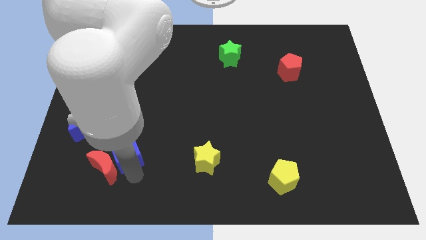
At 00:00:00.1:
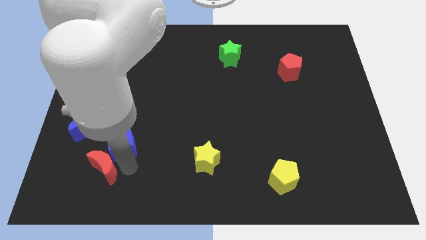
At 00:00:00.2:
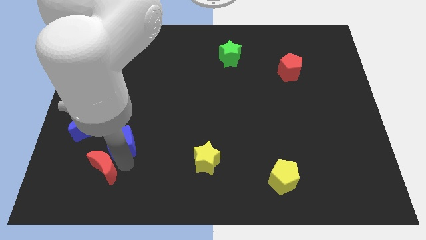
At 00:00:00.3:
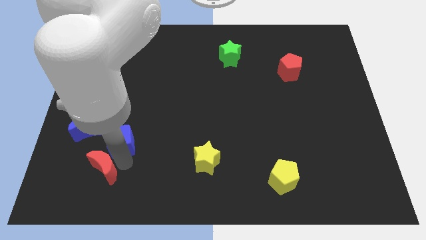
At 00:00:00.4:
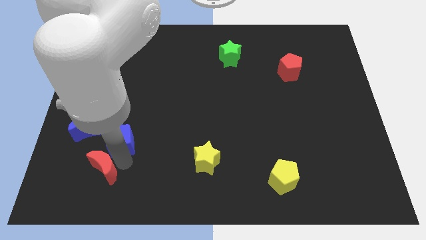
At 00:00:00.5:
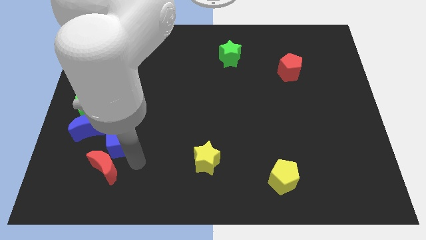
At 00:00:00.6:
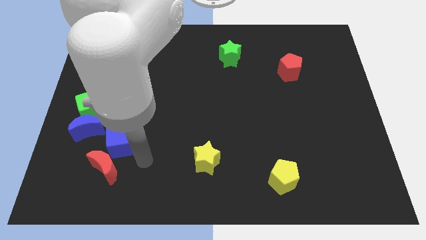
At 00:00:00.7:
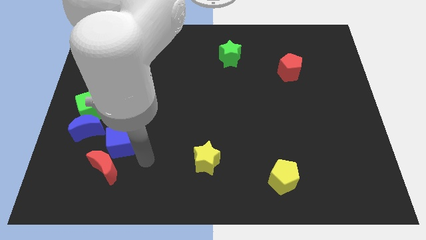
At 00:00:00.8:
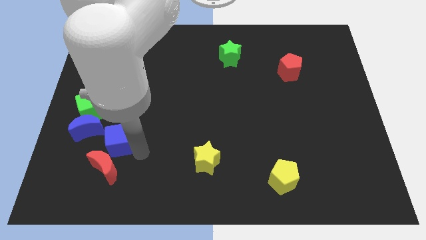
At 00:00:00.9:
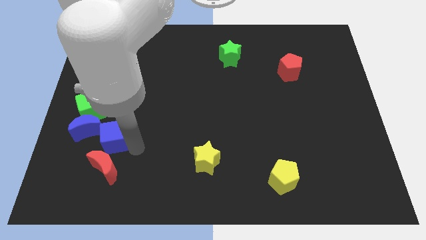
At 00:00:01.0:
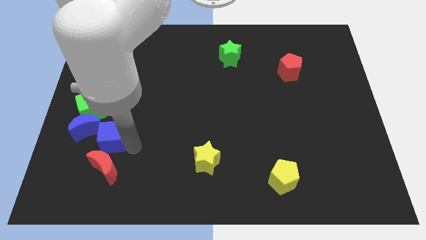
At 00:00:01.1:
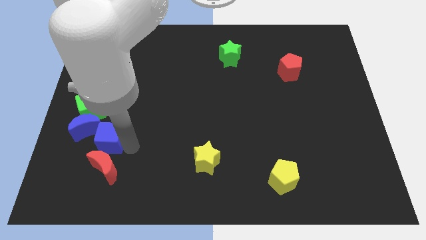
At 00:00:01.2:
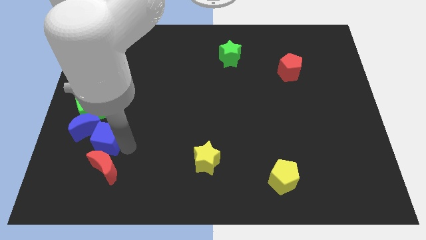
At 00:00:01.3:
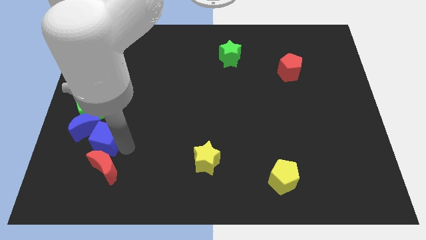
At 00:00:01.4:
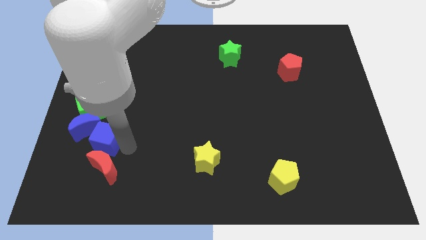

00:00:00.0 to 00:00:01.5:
place the blue cube below the blue crescent

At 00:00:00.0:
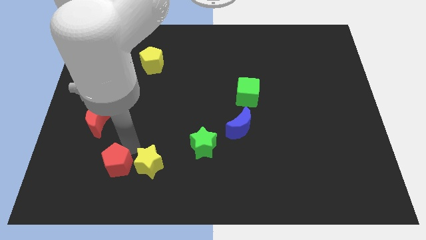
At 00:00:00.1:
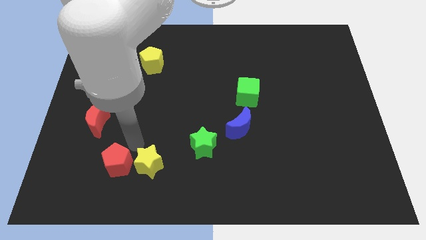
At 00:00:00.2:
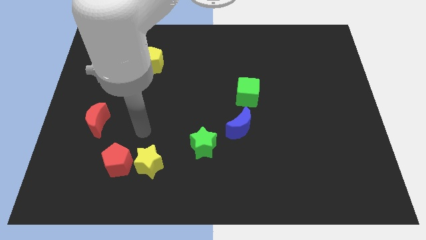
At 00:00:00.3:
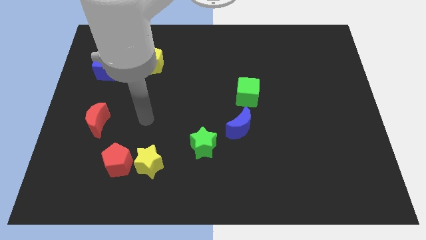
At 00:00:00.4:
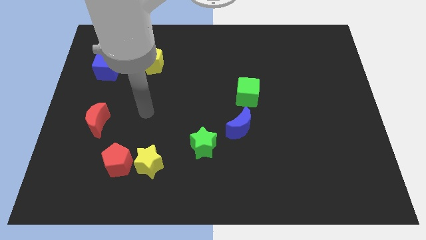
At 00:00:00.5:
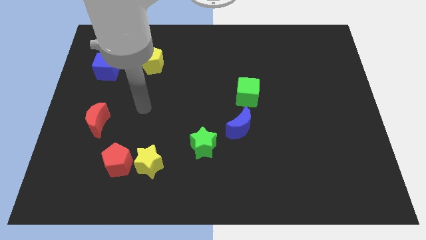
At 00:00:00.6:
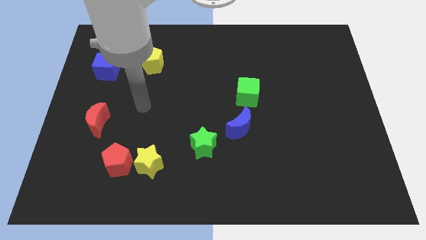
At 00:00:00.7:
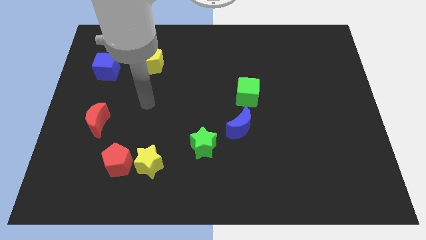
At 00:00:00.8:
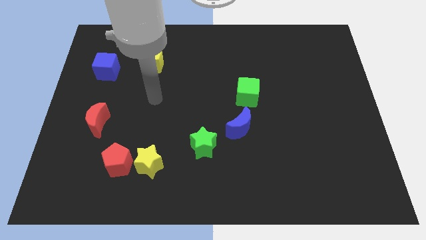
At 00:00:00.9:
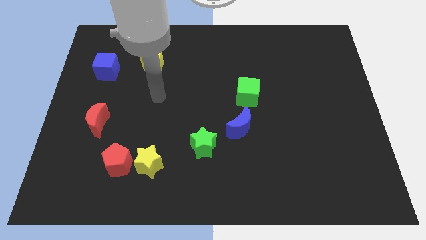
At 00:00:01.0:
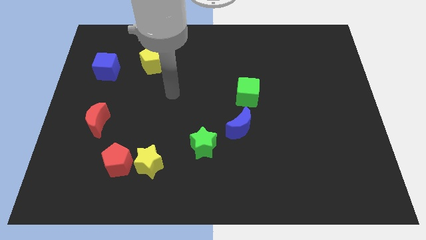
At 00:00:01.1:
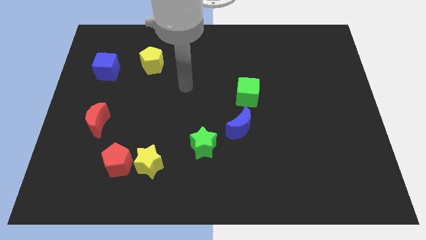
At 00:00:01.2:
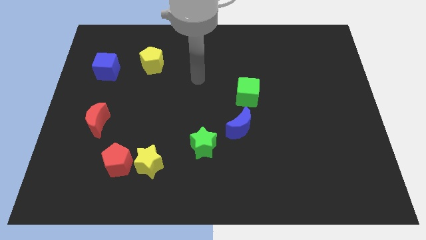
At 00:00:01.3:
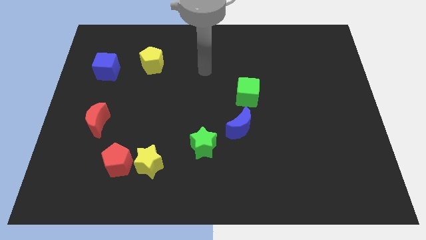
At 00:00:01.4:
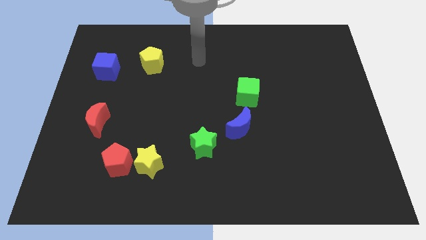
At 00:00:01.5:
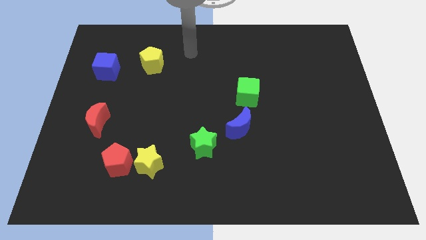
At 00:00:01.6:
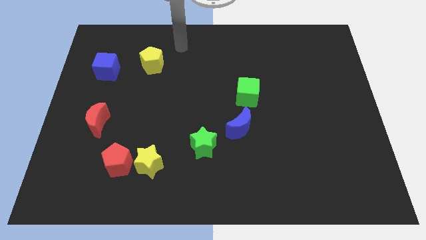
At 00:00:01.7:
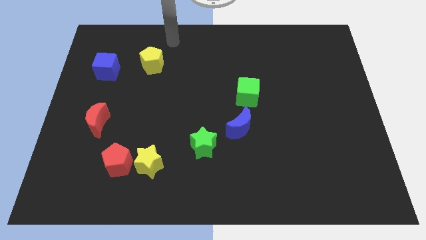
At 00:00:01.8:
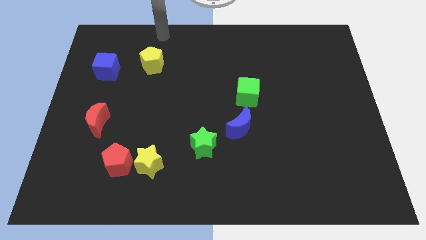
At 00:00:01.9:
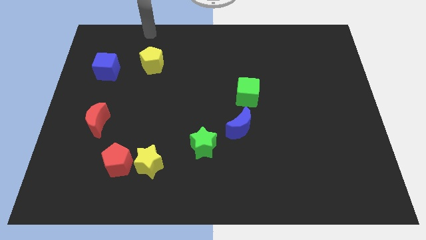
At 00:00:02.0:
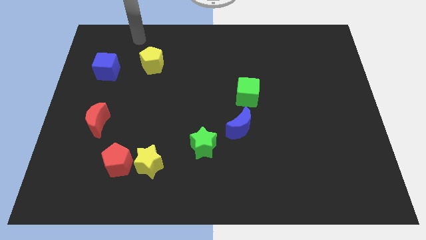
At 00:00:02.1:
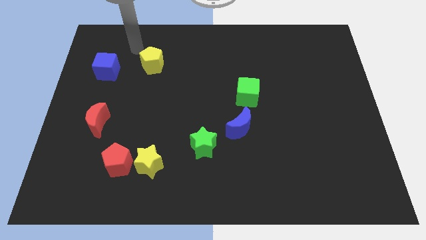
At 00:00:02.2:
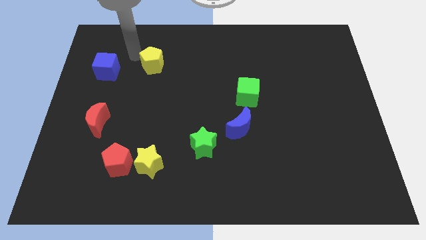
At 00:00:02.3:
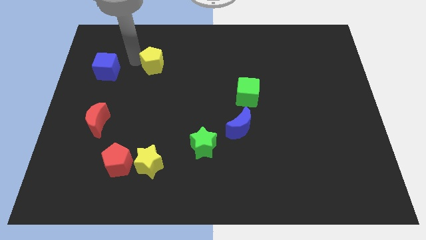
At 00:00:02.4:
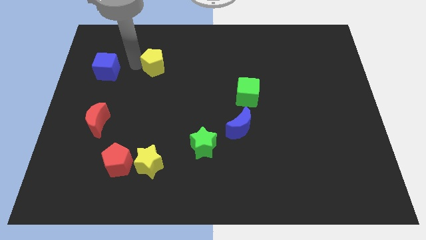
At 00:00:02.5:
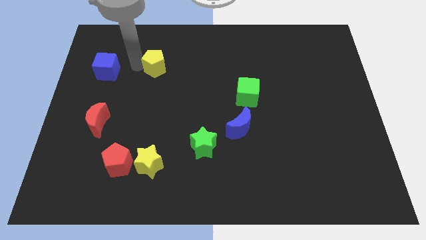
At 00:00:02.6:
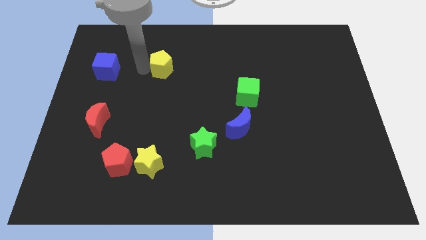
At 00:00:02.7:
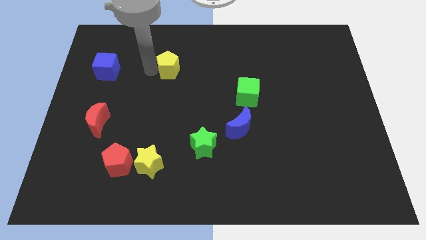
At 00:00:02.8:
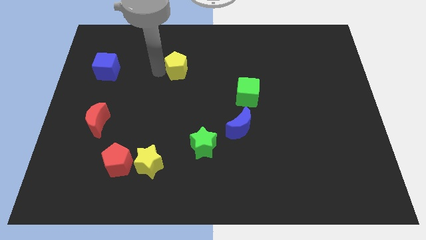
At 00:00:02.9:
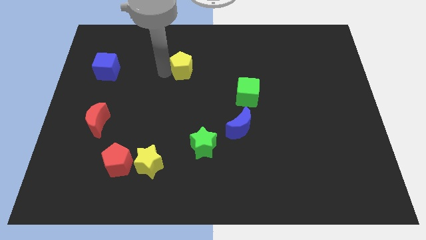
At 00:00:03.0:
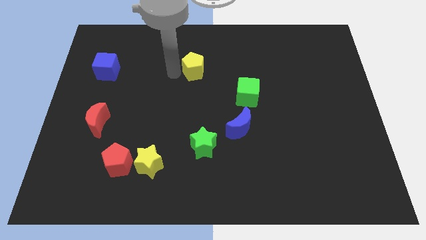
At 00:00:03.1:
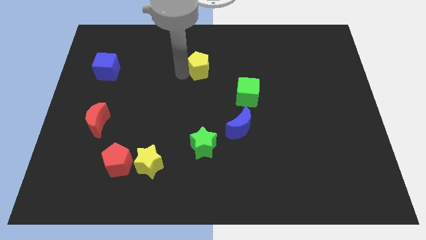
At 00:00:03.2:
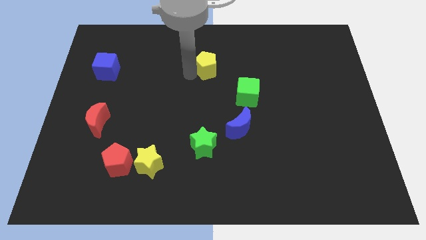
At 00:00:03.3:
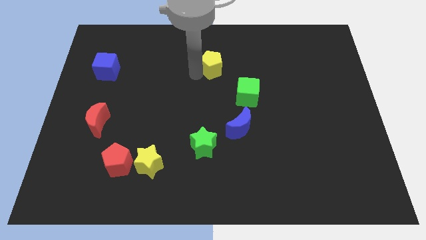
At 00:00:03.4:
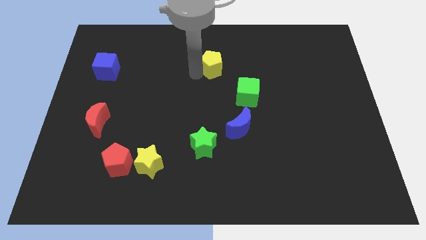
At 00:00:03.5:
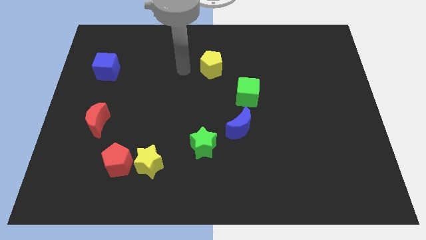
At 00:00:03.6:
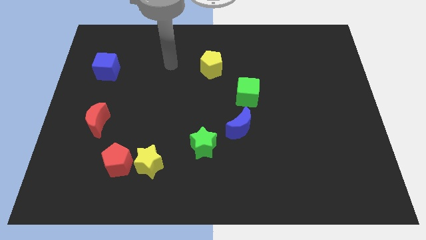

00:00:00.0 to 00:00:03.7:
place the yellow pentagon diagonal to the green cube

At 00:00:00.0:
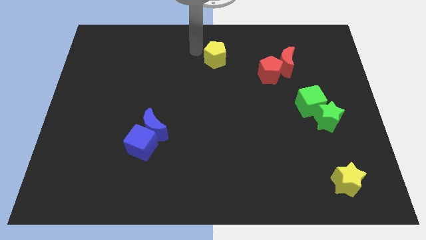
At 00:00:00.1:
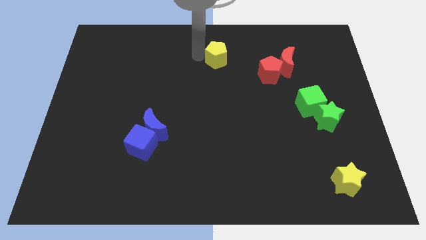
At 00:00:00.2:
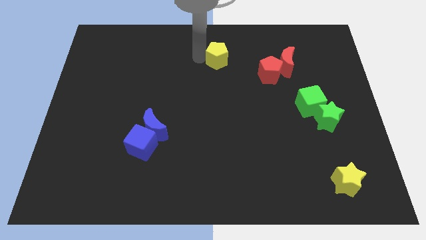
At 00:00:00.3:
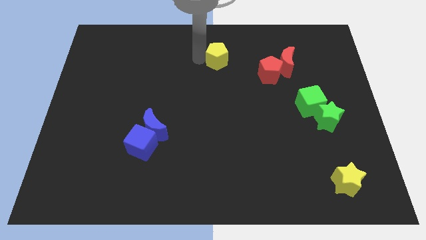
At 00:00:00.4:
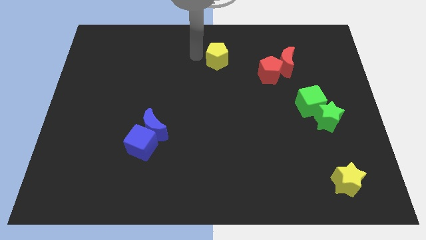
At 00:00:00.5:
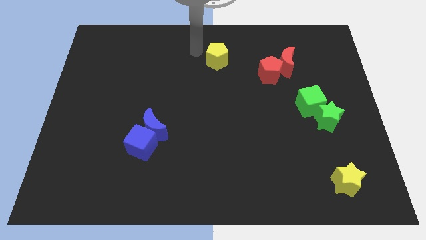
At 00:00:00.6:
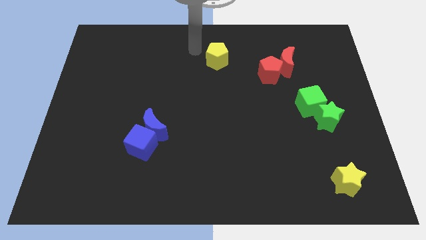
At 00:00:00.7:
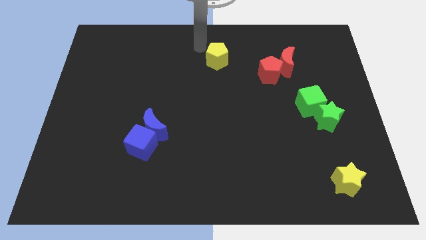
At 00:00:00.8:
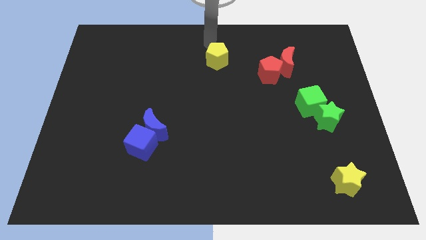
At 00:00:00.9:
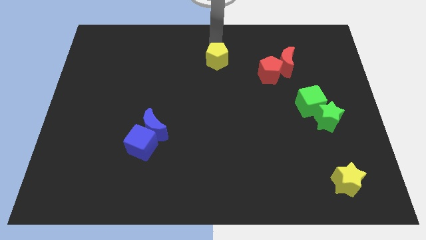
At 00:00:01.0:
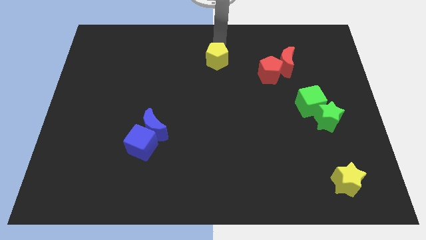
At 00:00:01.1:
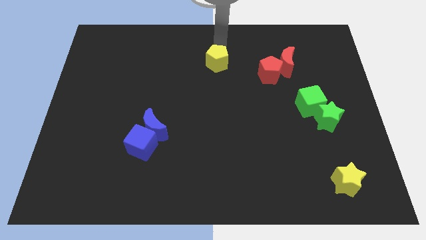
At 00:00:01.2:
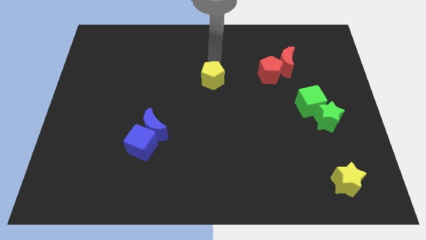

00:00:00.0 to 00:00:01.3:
push the yellow pentagon to the left of the red pentagon

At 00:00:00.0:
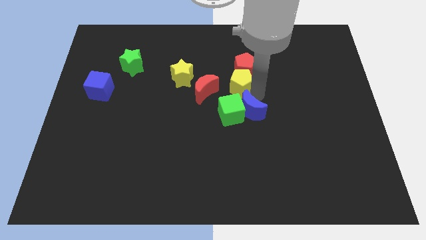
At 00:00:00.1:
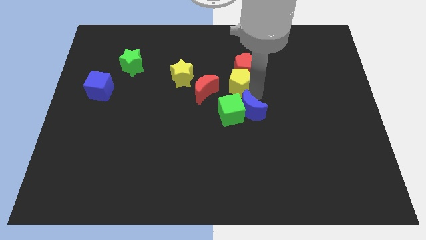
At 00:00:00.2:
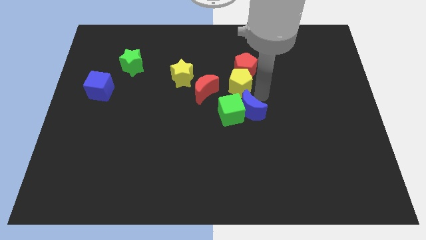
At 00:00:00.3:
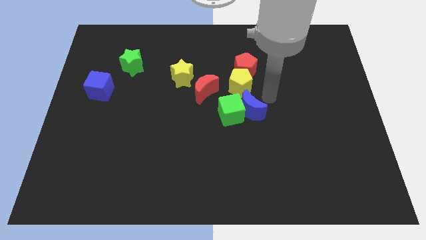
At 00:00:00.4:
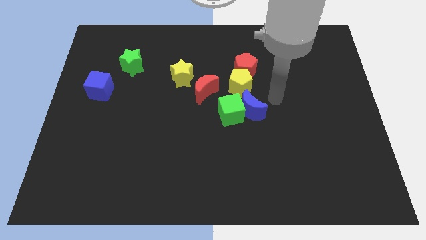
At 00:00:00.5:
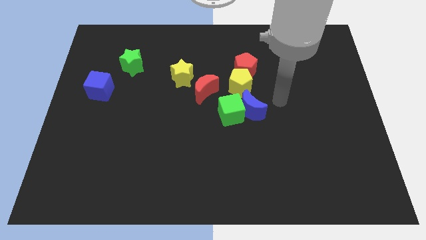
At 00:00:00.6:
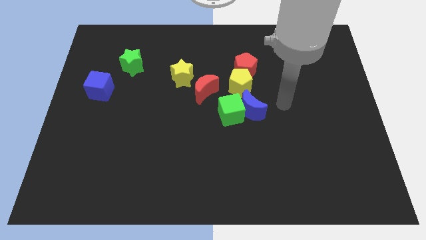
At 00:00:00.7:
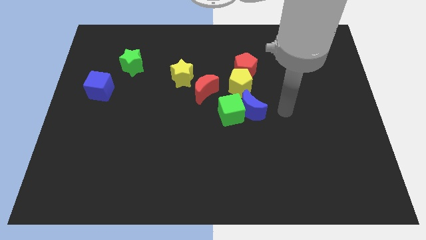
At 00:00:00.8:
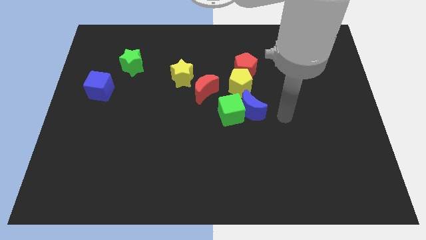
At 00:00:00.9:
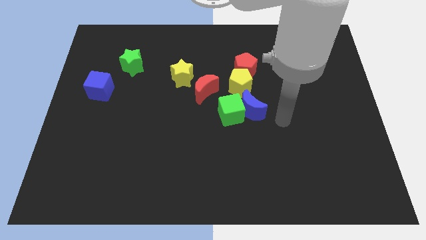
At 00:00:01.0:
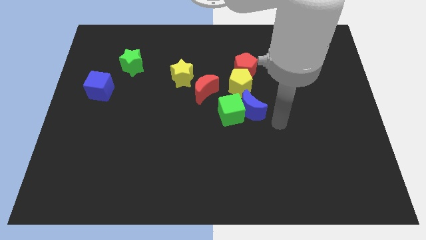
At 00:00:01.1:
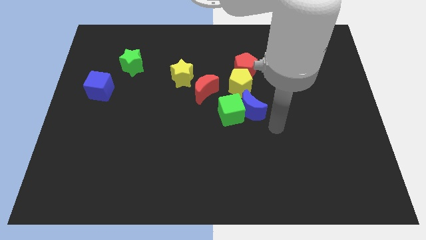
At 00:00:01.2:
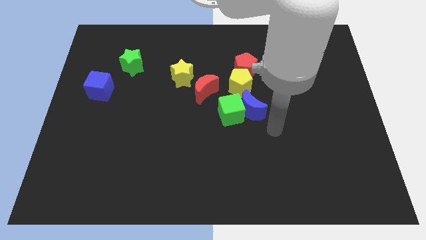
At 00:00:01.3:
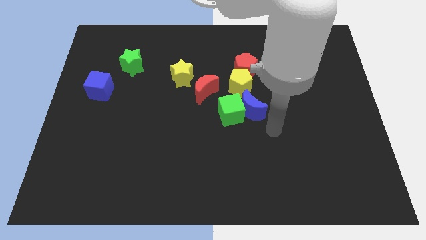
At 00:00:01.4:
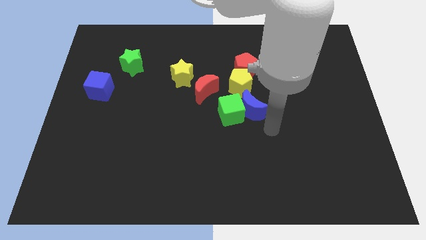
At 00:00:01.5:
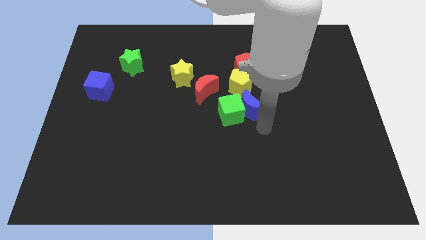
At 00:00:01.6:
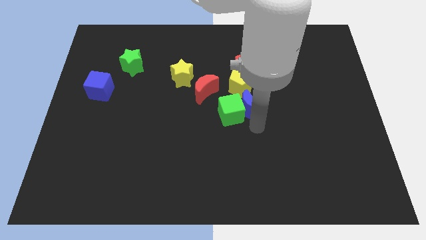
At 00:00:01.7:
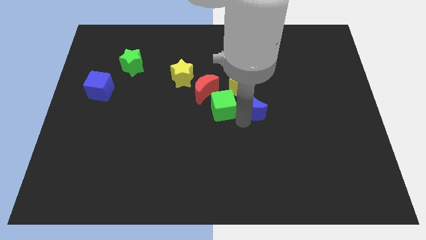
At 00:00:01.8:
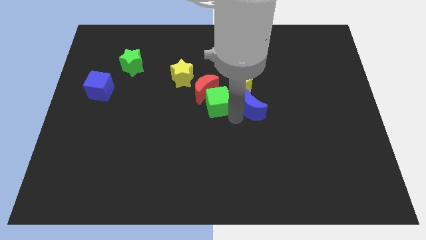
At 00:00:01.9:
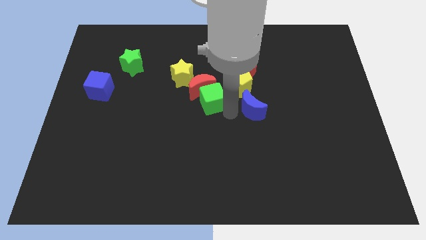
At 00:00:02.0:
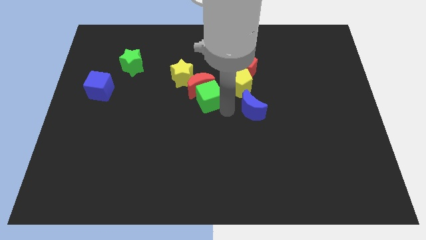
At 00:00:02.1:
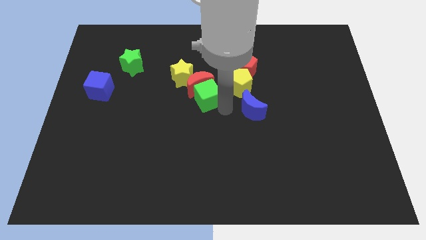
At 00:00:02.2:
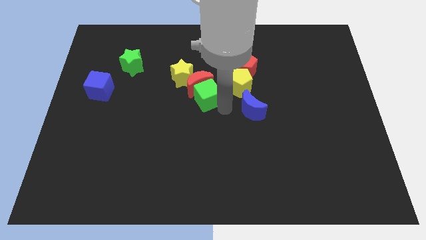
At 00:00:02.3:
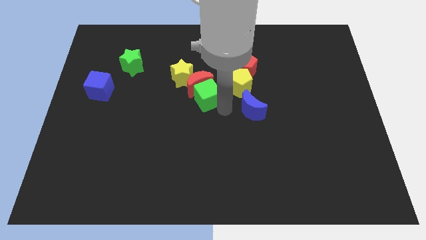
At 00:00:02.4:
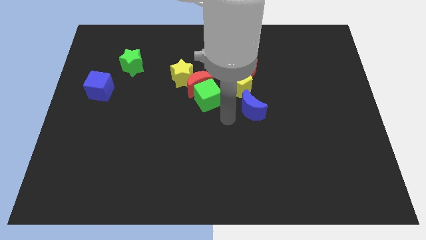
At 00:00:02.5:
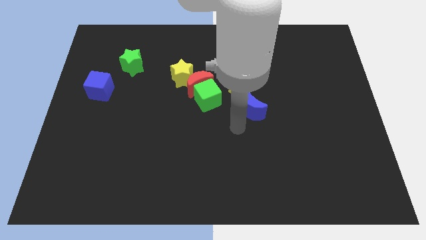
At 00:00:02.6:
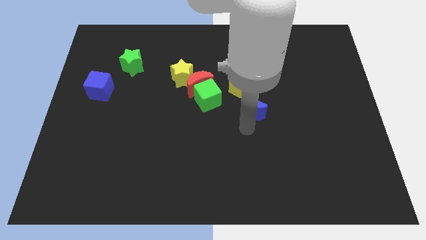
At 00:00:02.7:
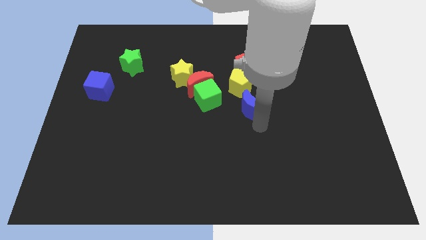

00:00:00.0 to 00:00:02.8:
separate the green cube and blue moon
